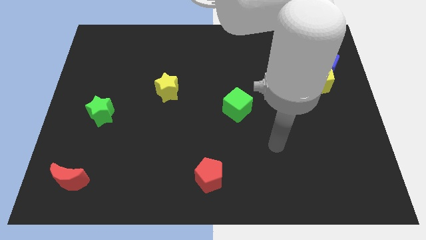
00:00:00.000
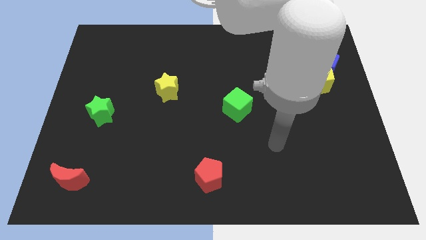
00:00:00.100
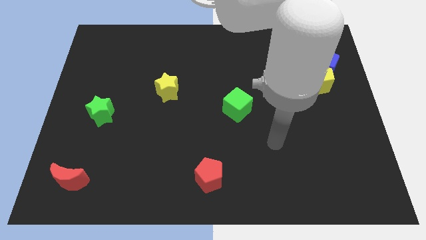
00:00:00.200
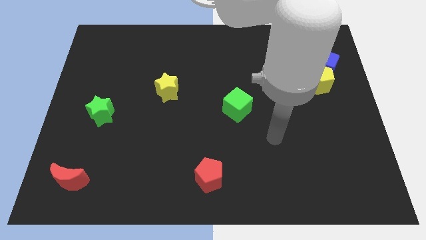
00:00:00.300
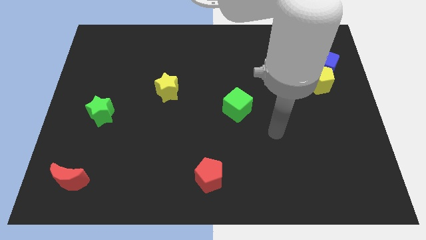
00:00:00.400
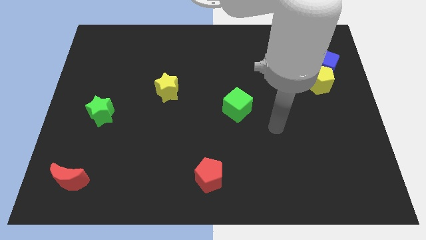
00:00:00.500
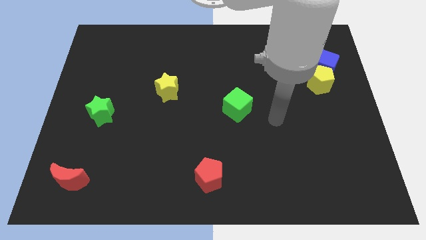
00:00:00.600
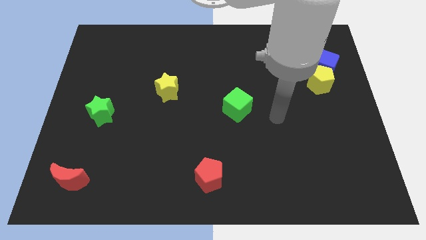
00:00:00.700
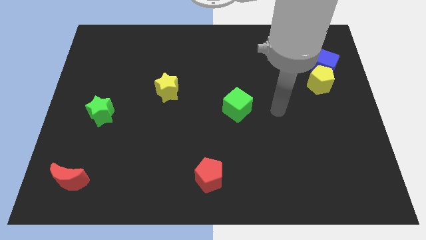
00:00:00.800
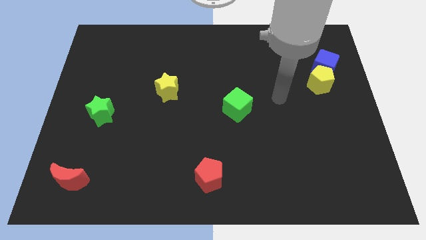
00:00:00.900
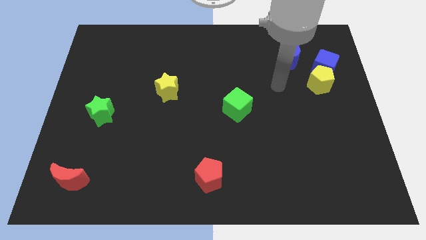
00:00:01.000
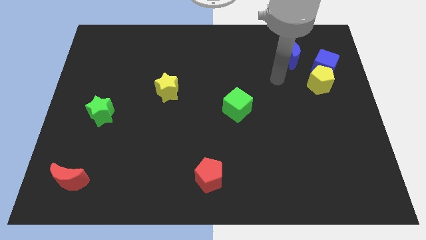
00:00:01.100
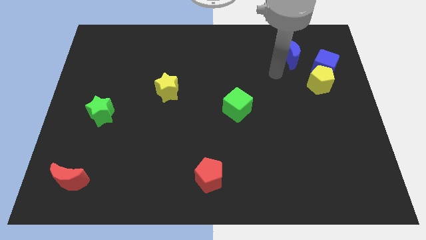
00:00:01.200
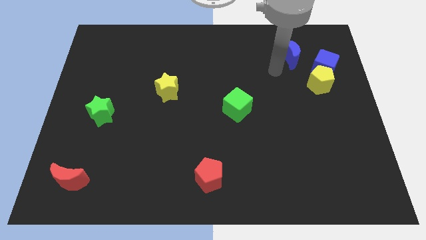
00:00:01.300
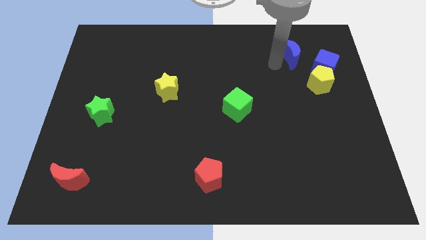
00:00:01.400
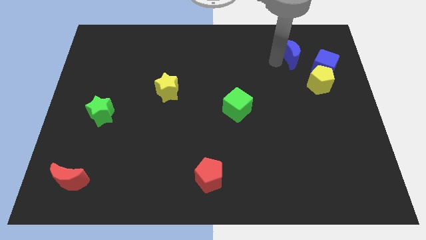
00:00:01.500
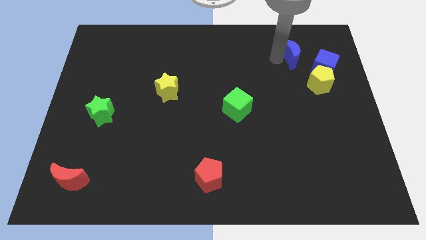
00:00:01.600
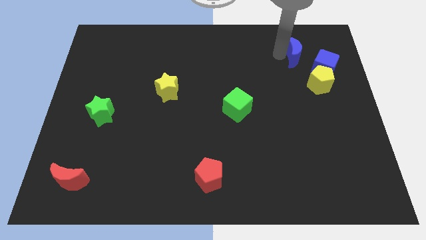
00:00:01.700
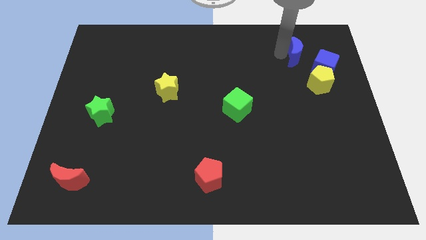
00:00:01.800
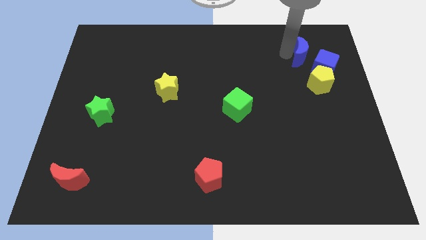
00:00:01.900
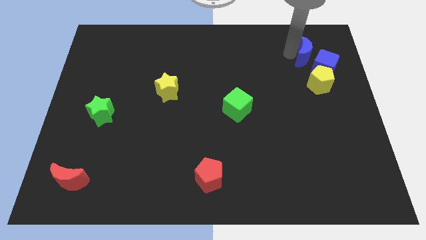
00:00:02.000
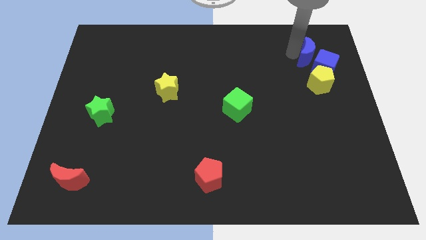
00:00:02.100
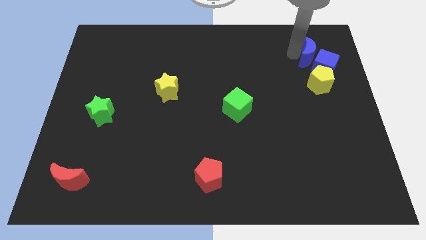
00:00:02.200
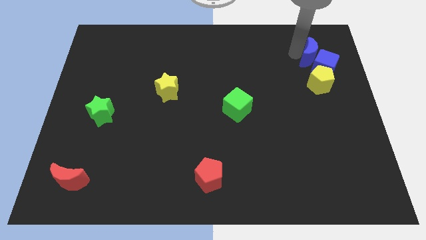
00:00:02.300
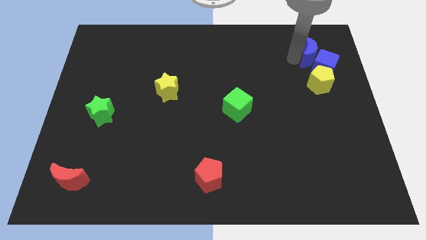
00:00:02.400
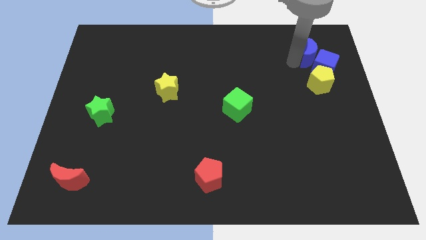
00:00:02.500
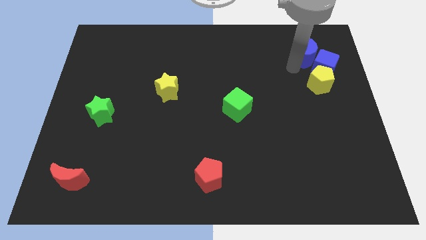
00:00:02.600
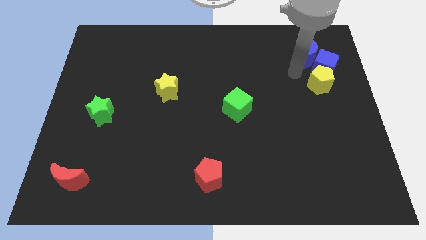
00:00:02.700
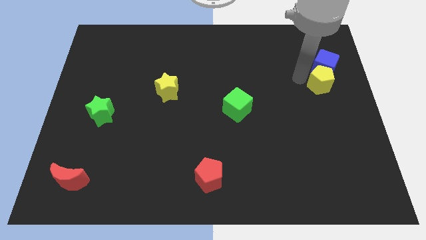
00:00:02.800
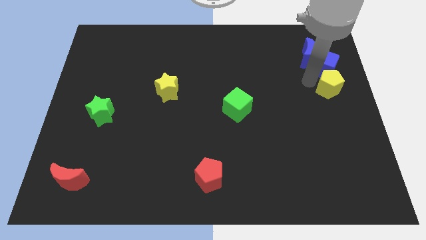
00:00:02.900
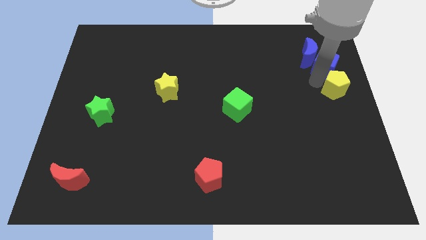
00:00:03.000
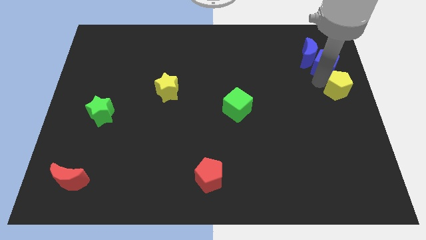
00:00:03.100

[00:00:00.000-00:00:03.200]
move the blue moon and yellow pentagon towards the top right side of the board

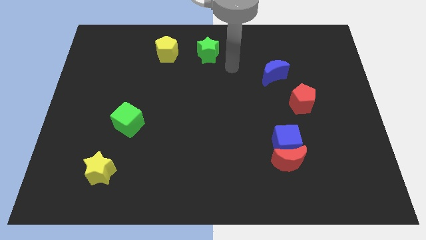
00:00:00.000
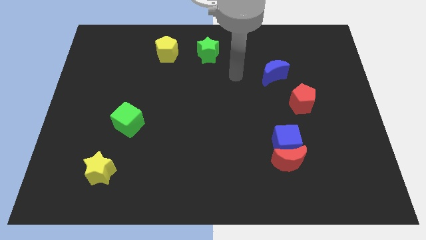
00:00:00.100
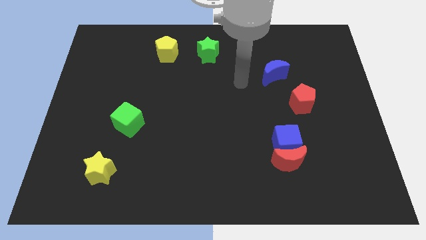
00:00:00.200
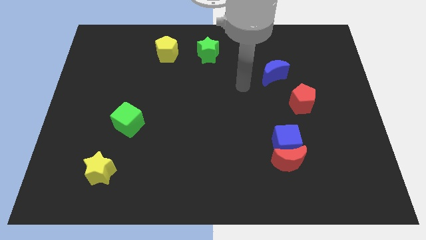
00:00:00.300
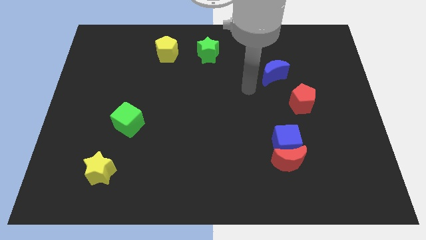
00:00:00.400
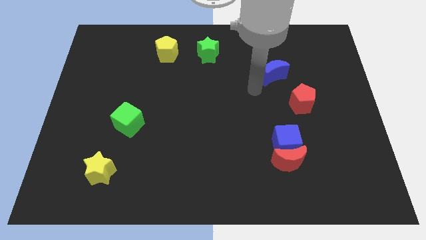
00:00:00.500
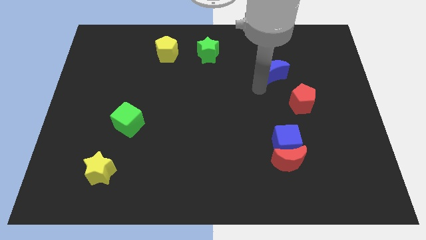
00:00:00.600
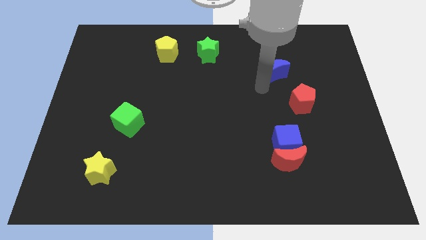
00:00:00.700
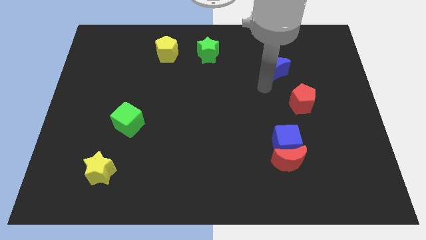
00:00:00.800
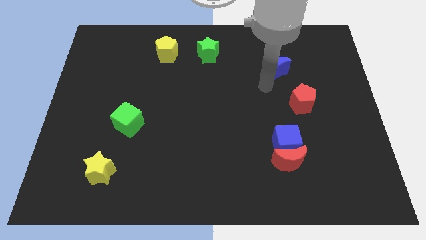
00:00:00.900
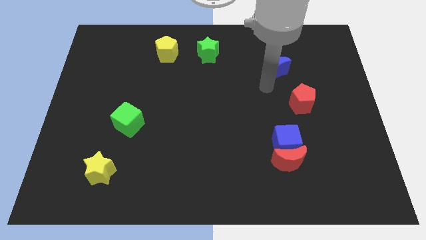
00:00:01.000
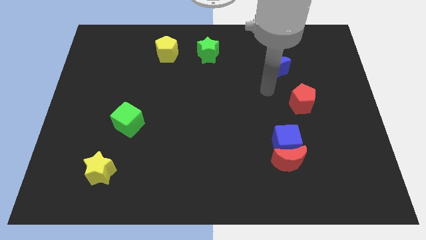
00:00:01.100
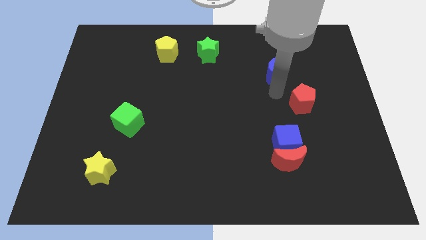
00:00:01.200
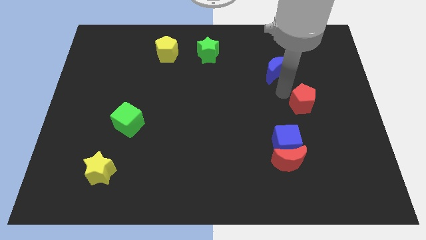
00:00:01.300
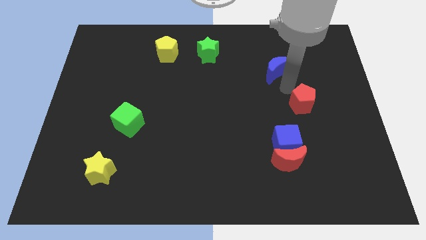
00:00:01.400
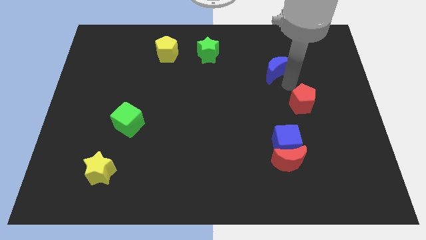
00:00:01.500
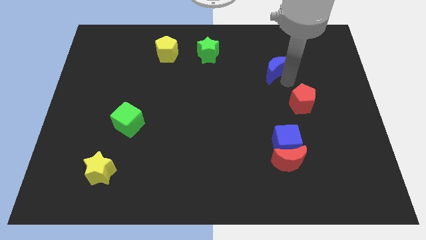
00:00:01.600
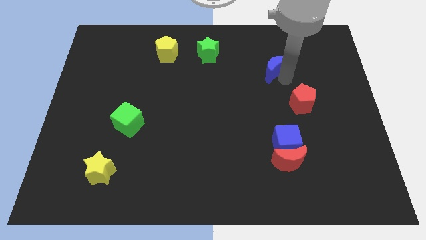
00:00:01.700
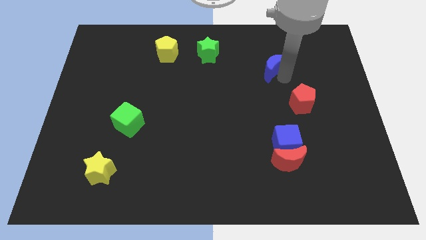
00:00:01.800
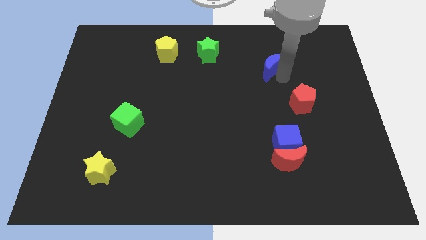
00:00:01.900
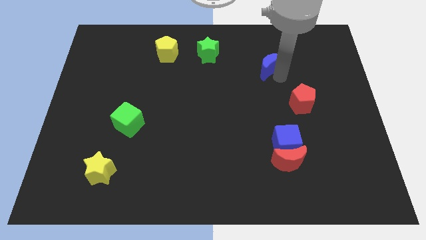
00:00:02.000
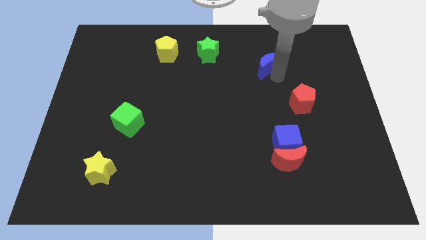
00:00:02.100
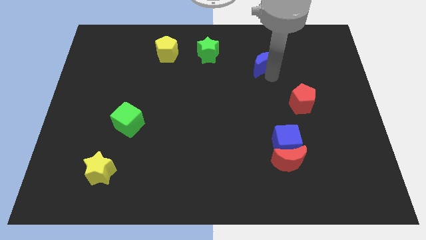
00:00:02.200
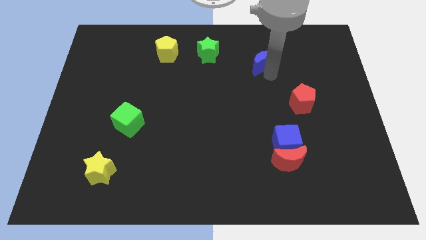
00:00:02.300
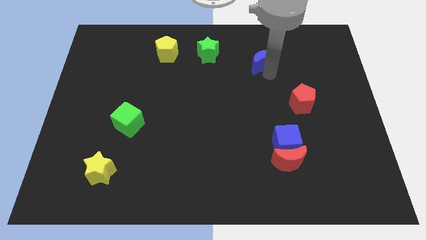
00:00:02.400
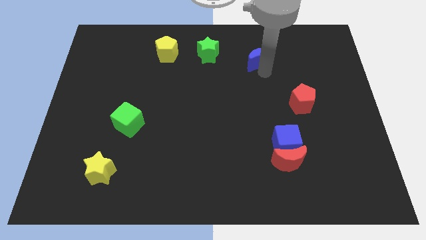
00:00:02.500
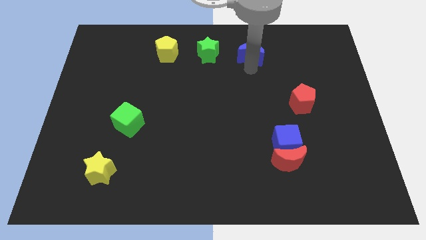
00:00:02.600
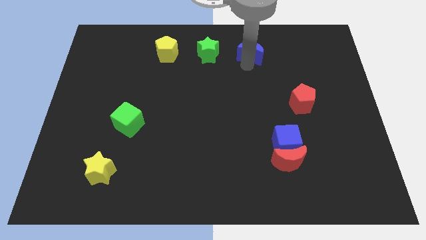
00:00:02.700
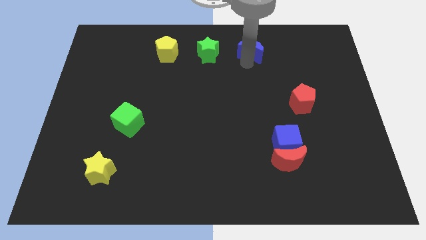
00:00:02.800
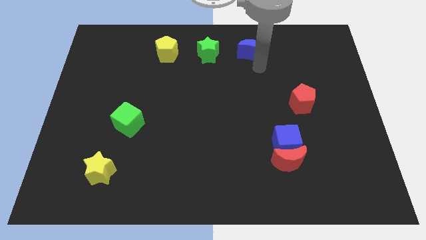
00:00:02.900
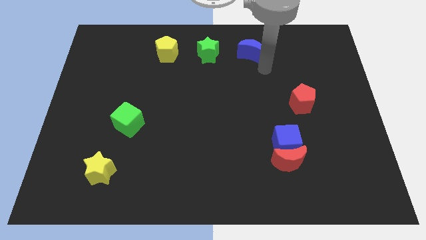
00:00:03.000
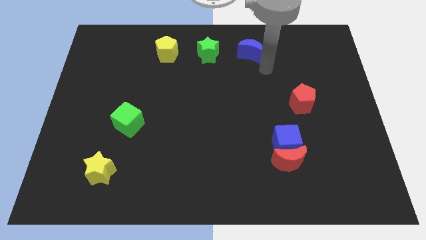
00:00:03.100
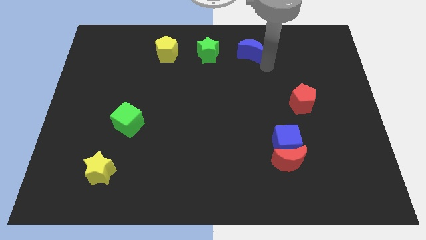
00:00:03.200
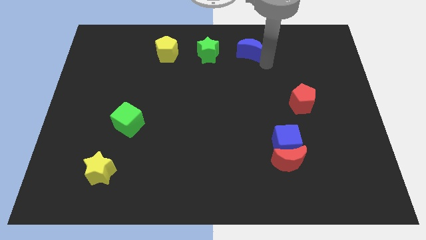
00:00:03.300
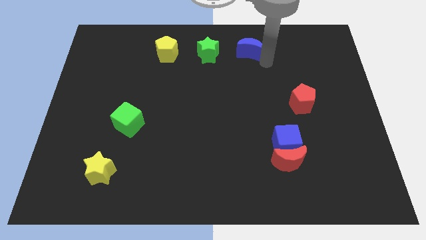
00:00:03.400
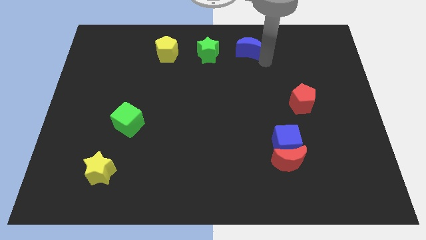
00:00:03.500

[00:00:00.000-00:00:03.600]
place the blue crescent at right side of the green star

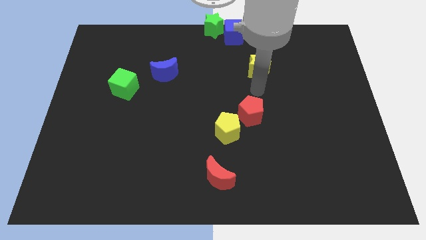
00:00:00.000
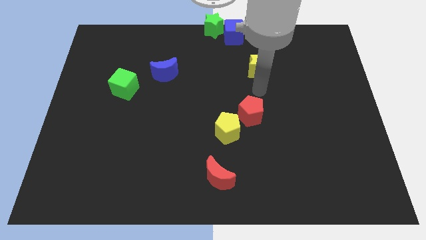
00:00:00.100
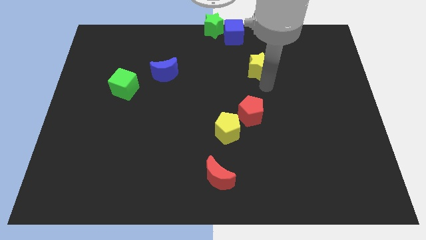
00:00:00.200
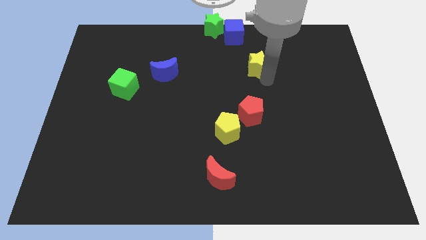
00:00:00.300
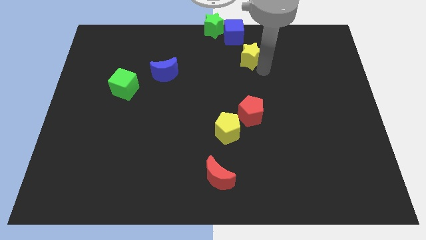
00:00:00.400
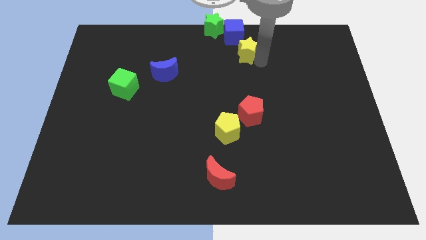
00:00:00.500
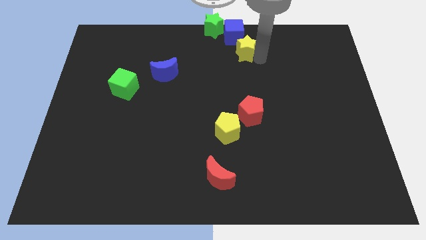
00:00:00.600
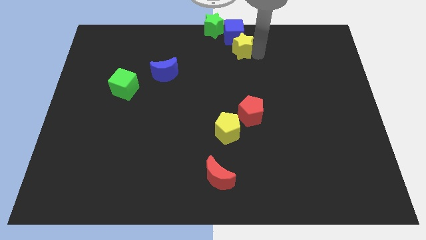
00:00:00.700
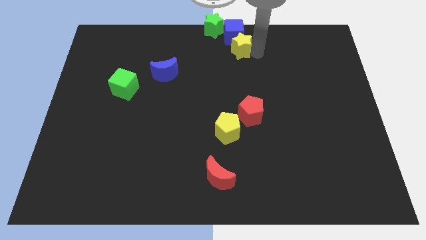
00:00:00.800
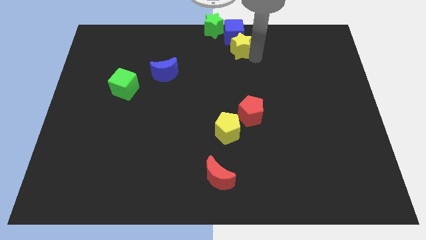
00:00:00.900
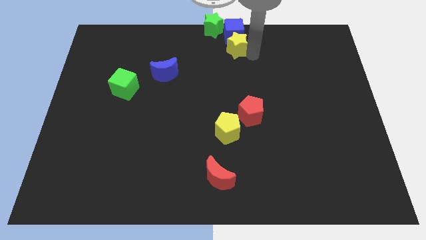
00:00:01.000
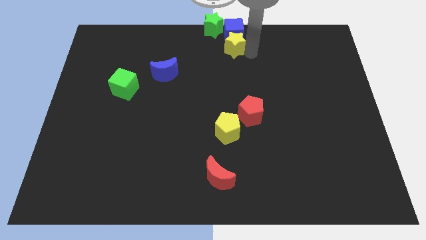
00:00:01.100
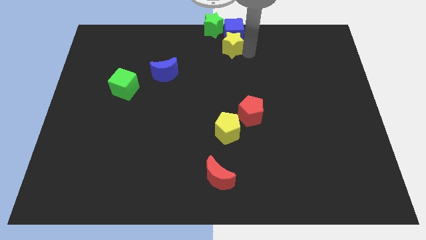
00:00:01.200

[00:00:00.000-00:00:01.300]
place the yellow star below the blue cube

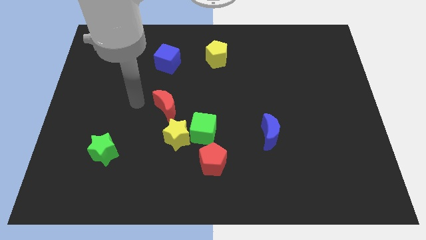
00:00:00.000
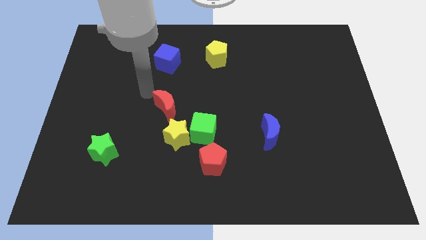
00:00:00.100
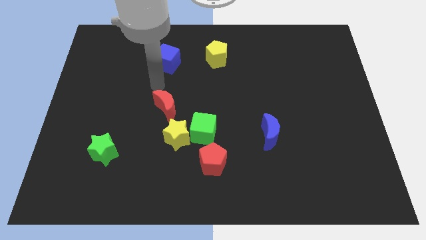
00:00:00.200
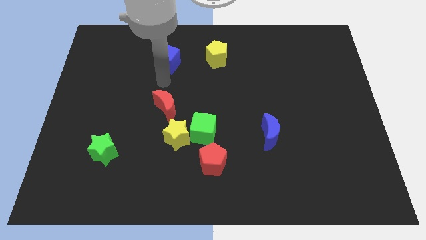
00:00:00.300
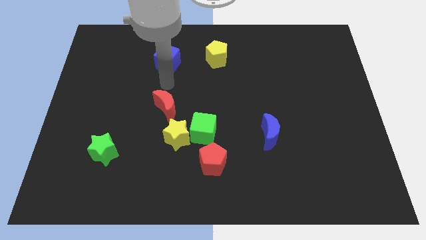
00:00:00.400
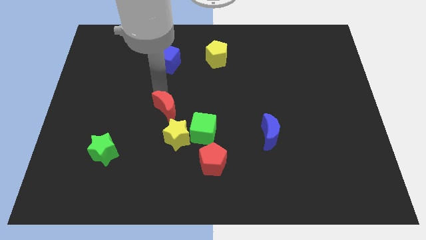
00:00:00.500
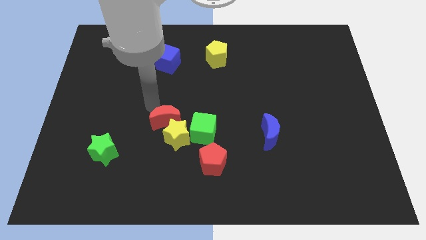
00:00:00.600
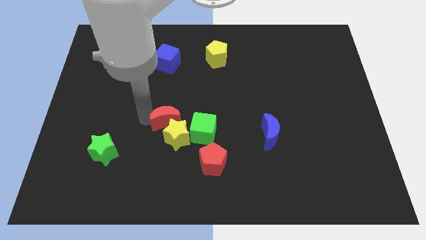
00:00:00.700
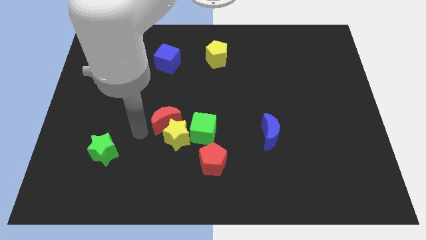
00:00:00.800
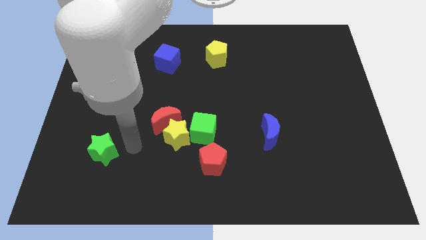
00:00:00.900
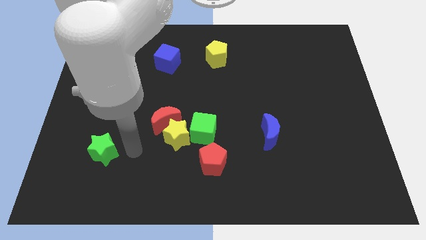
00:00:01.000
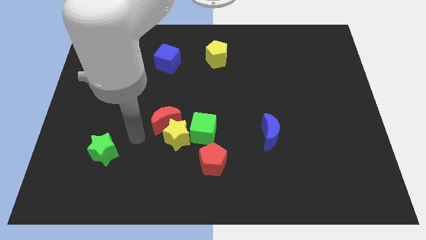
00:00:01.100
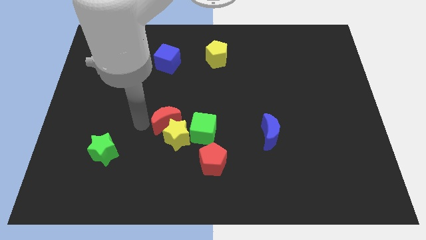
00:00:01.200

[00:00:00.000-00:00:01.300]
move the red crescent above the yellow star
